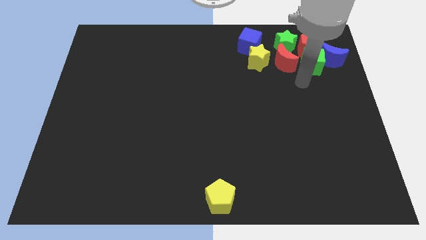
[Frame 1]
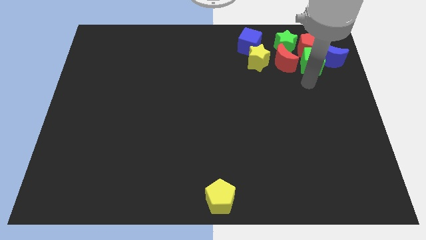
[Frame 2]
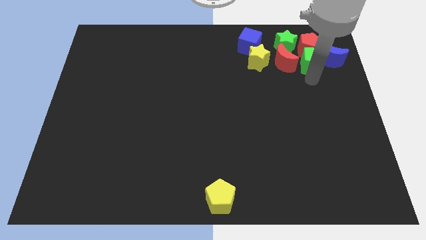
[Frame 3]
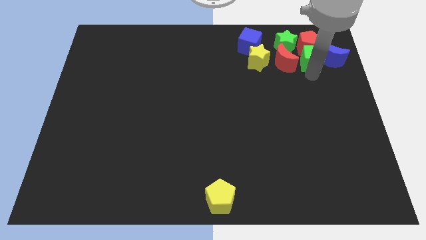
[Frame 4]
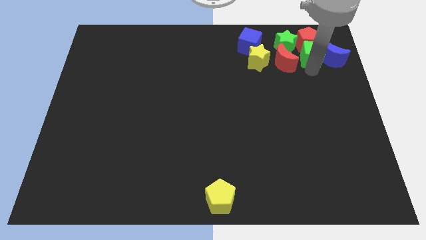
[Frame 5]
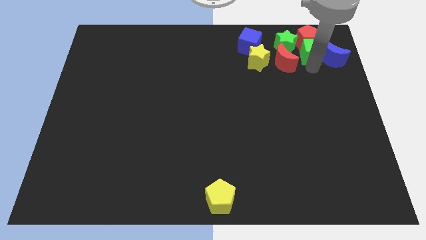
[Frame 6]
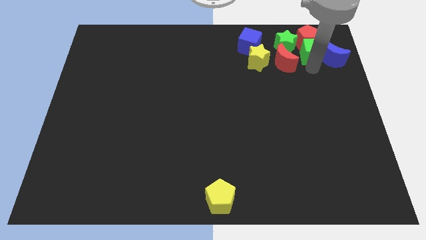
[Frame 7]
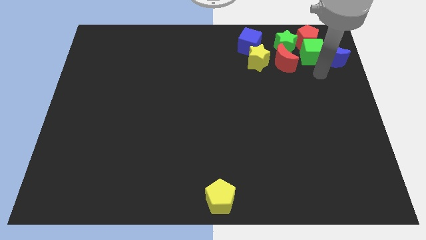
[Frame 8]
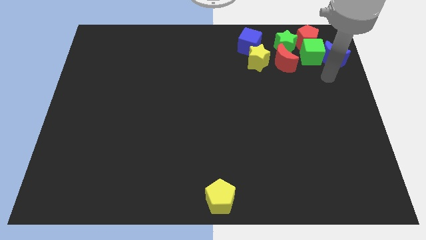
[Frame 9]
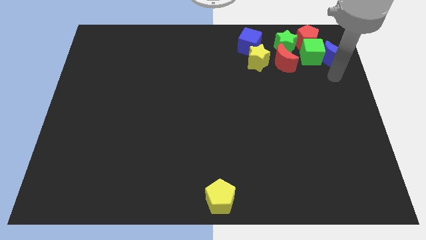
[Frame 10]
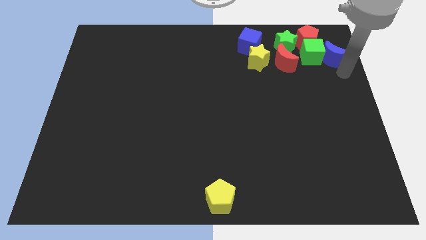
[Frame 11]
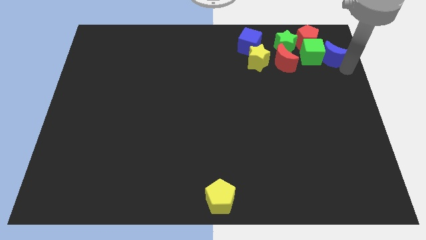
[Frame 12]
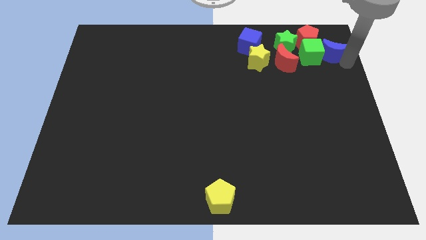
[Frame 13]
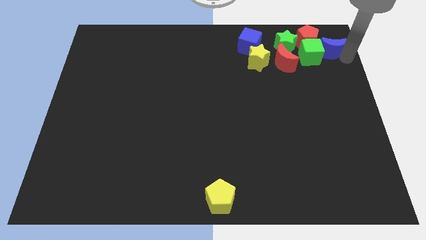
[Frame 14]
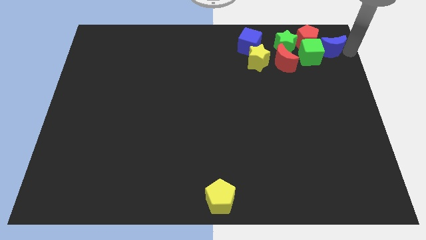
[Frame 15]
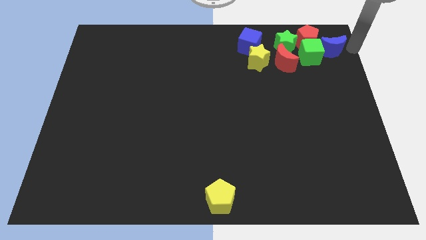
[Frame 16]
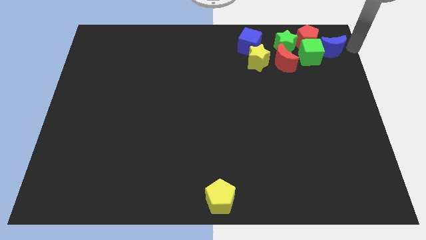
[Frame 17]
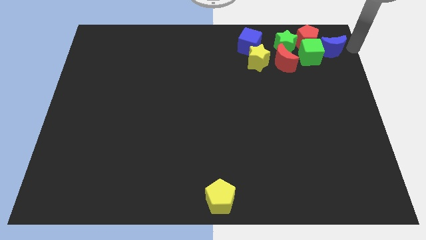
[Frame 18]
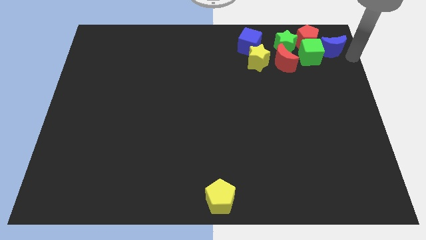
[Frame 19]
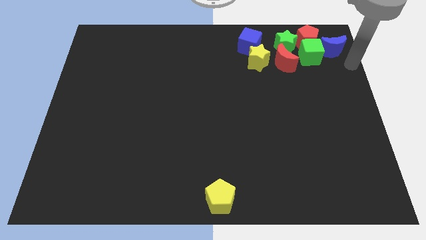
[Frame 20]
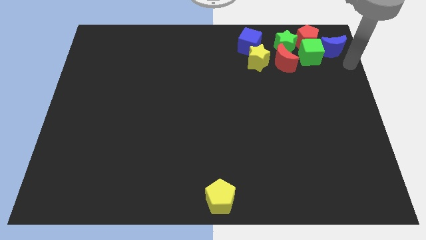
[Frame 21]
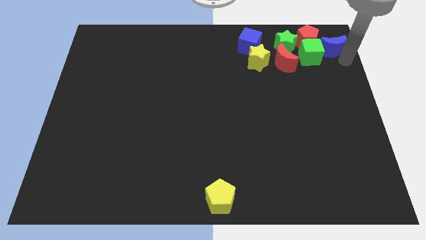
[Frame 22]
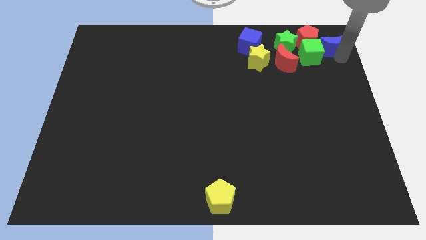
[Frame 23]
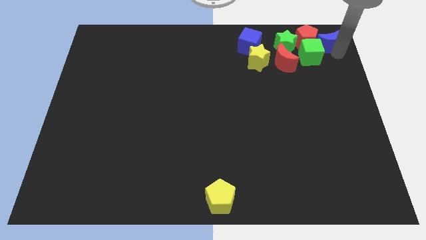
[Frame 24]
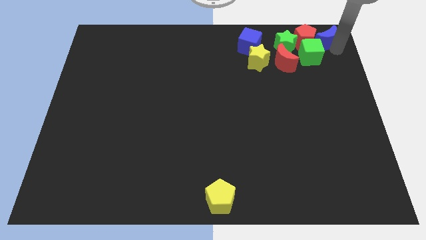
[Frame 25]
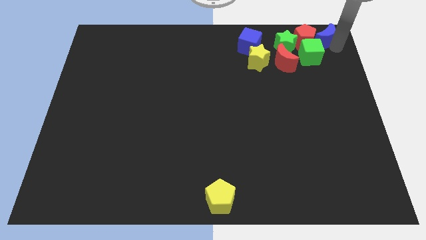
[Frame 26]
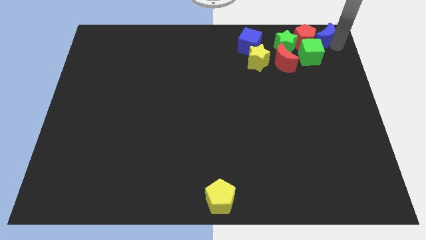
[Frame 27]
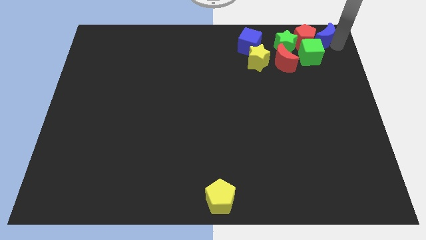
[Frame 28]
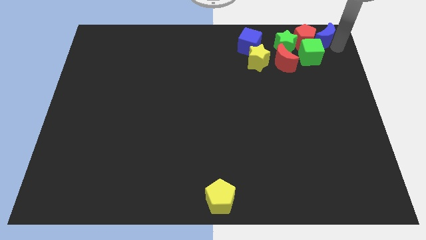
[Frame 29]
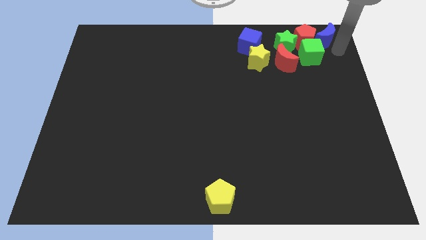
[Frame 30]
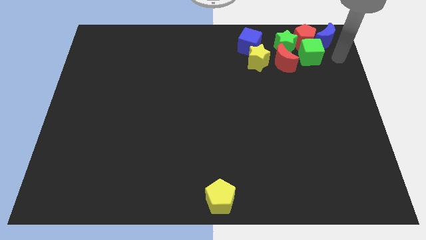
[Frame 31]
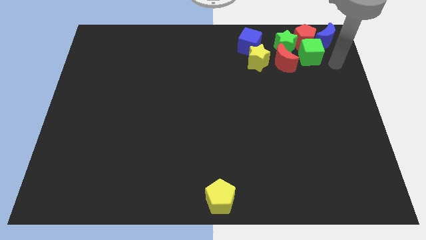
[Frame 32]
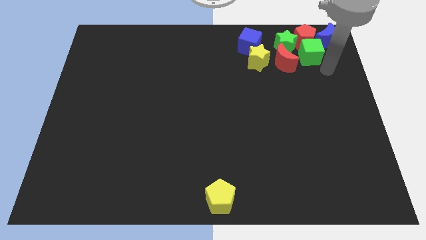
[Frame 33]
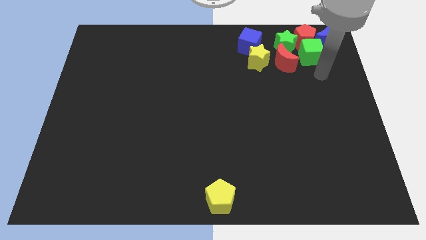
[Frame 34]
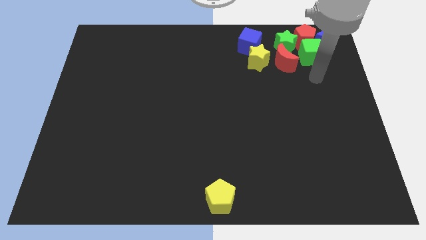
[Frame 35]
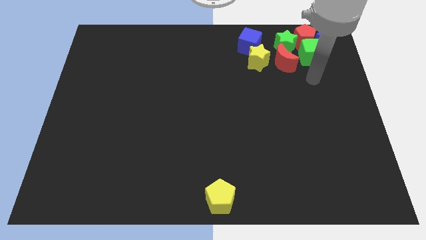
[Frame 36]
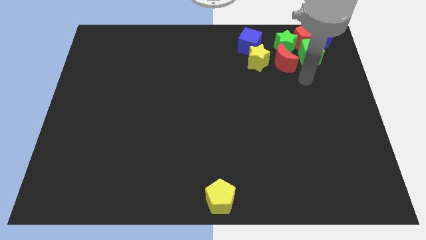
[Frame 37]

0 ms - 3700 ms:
push the green cube and blue crescent into the red pentagon

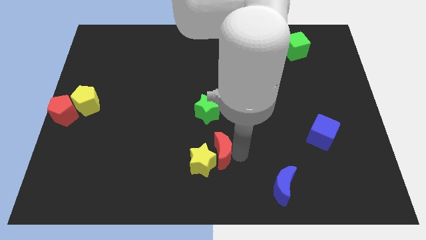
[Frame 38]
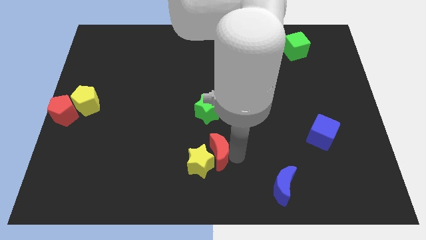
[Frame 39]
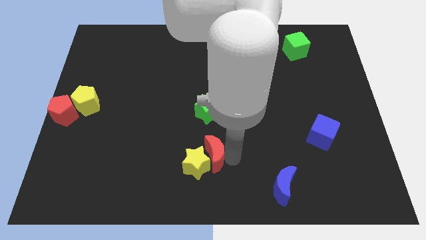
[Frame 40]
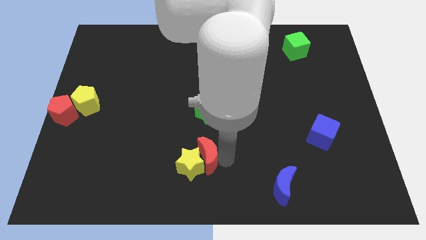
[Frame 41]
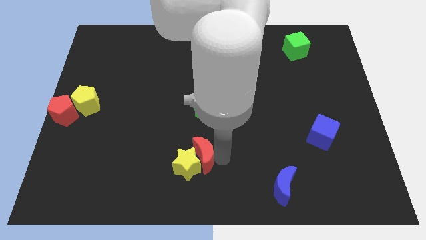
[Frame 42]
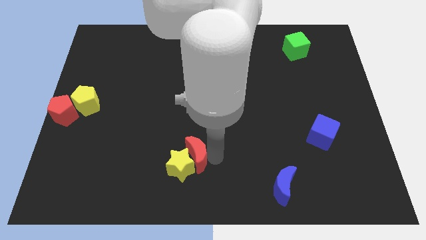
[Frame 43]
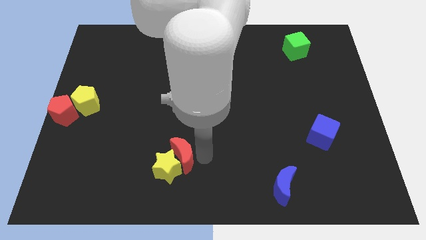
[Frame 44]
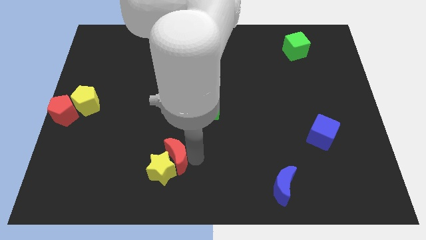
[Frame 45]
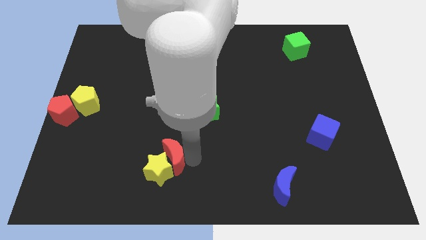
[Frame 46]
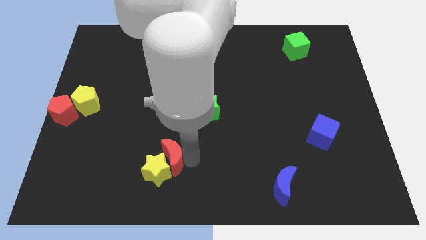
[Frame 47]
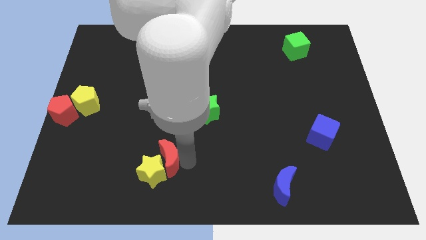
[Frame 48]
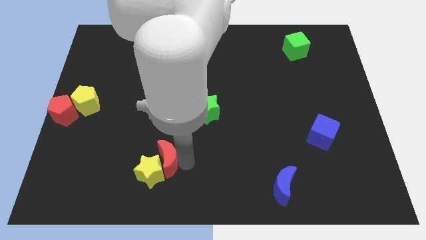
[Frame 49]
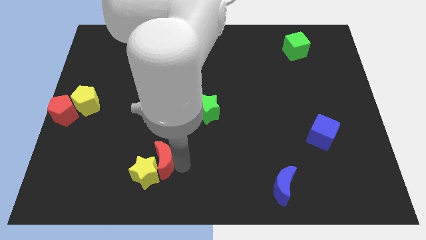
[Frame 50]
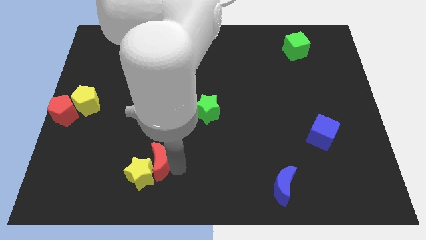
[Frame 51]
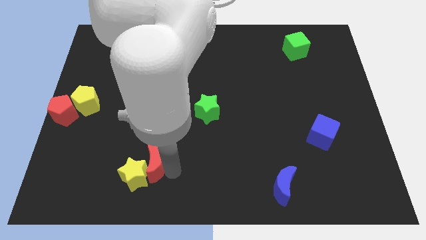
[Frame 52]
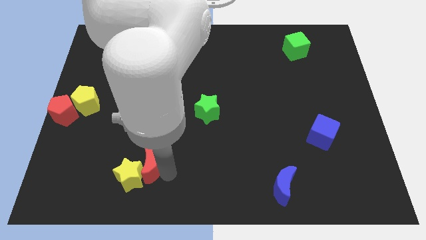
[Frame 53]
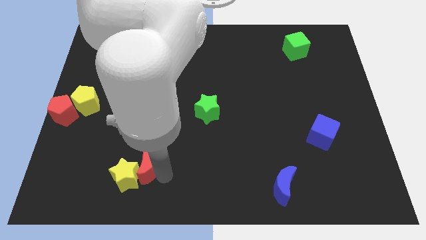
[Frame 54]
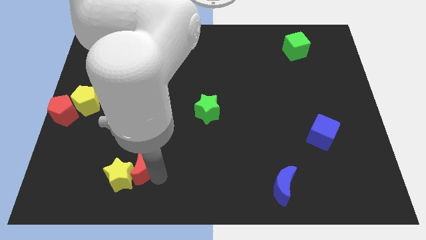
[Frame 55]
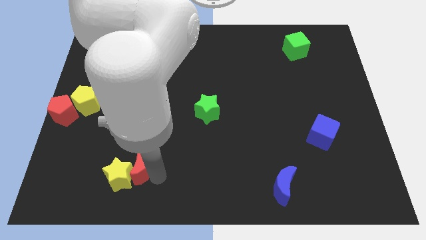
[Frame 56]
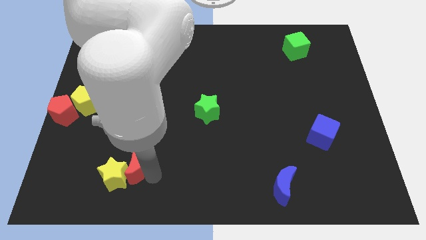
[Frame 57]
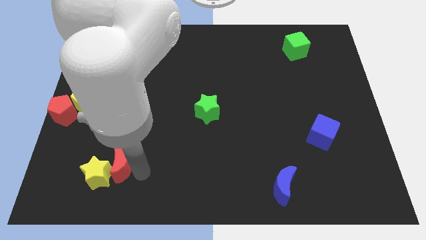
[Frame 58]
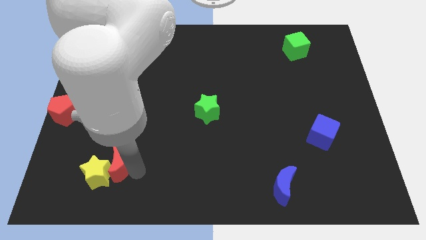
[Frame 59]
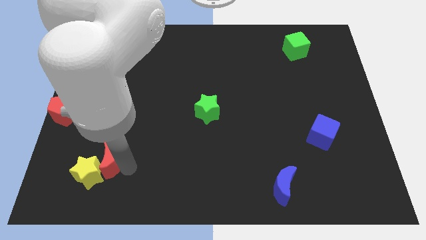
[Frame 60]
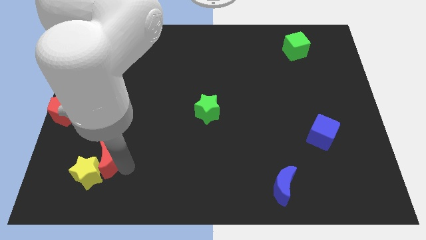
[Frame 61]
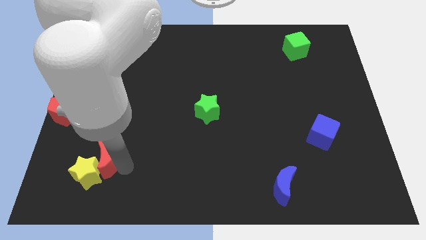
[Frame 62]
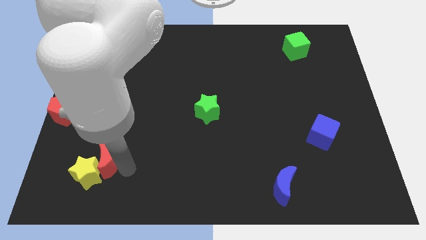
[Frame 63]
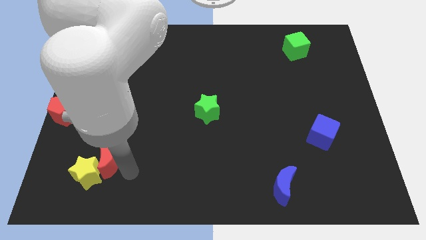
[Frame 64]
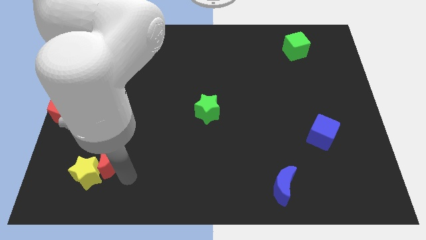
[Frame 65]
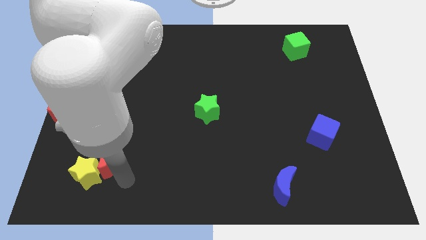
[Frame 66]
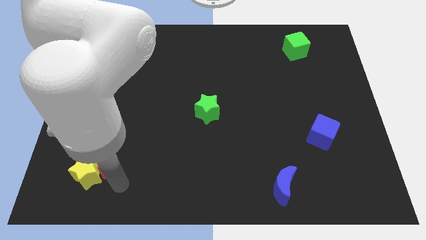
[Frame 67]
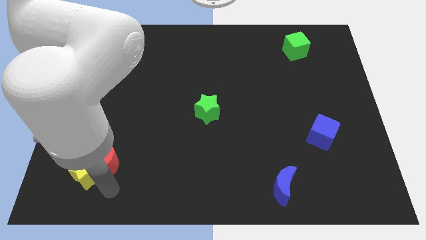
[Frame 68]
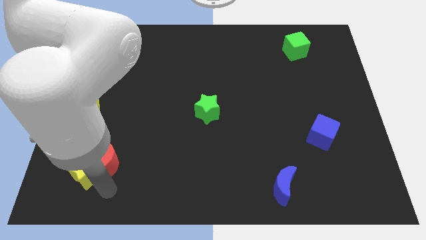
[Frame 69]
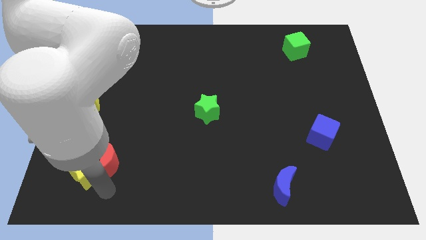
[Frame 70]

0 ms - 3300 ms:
push the red moon and yellow star to the left side of the board

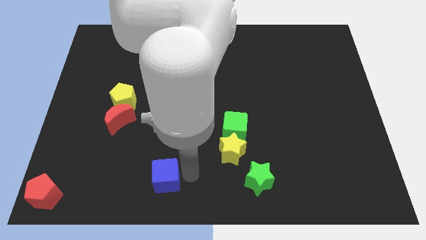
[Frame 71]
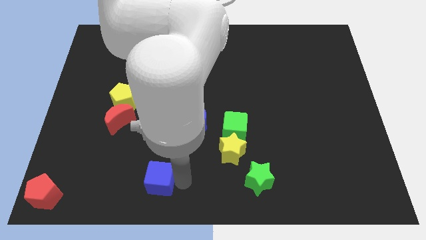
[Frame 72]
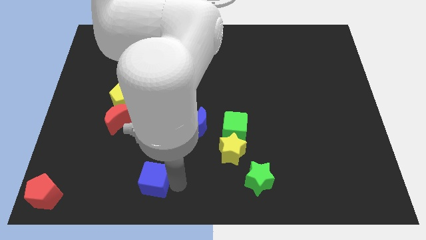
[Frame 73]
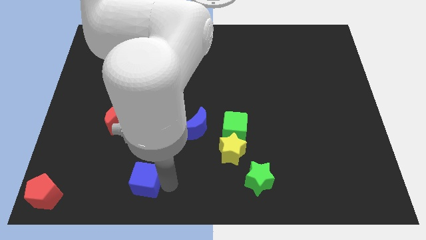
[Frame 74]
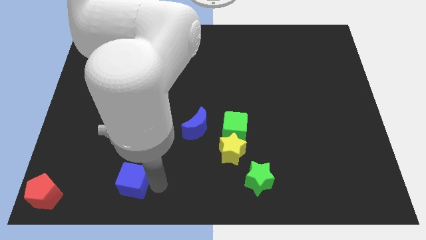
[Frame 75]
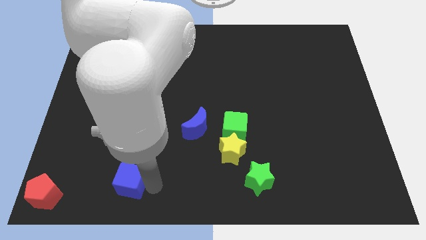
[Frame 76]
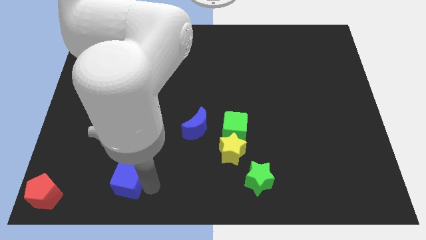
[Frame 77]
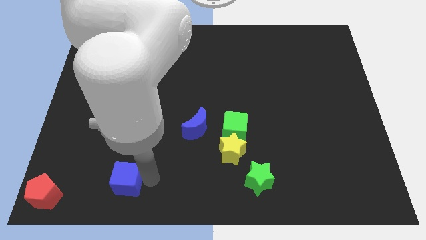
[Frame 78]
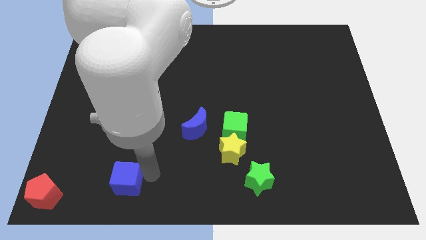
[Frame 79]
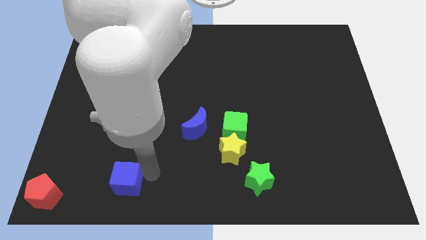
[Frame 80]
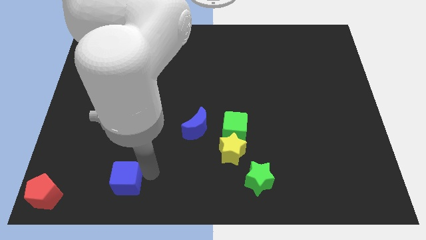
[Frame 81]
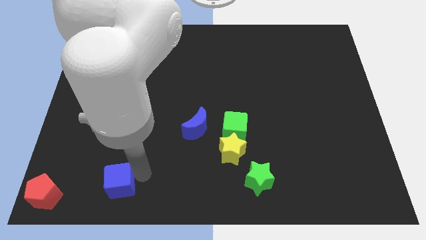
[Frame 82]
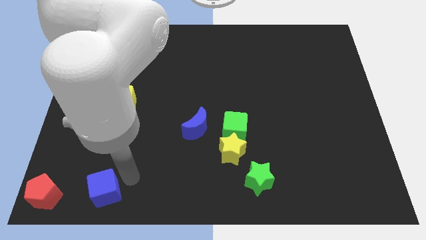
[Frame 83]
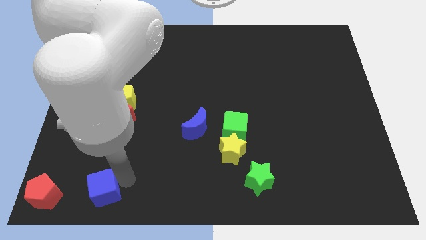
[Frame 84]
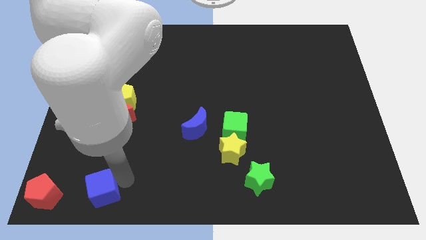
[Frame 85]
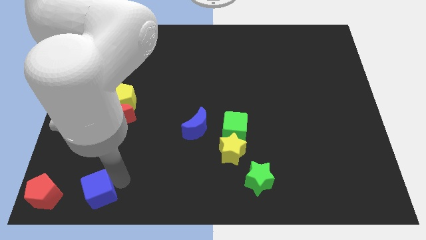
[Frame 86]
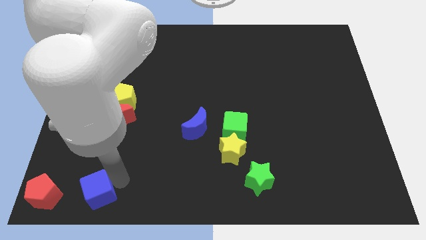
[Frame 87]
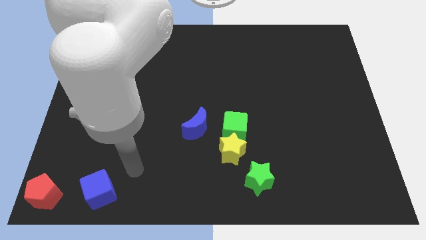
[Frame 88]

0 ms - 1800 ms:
move the blue cube towards the right side of the red pentagon

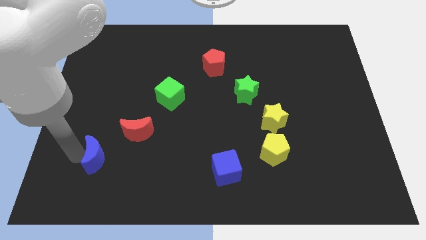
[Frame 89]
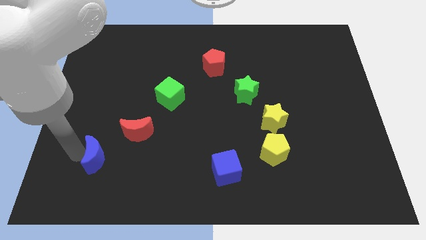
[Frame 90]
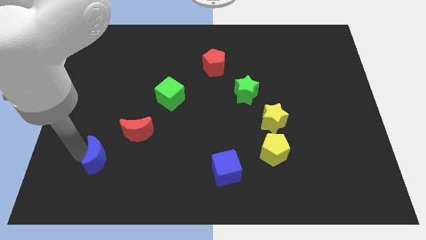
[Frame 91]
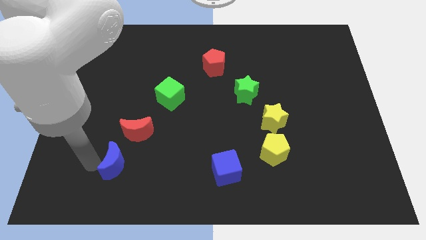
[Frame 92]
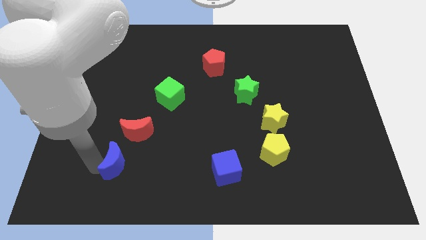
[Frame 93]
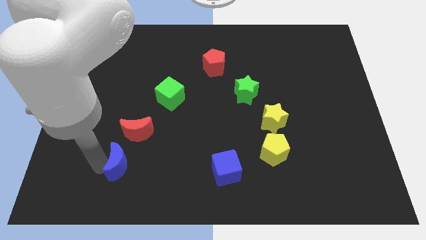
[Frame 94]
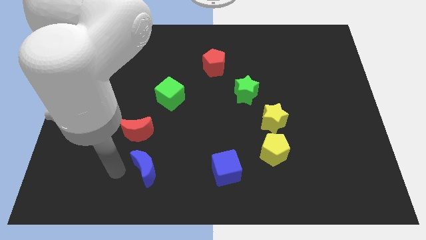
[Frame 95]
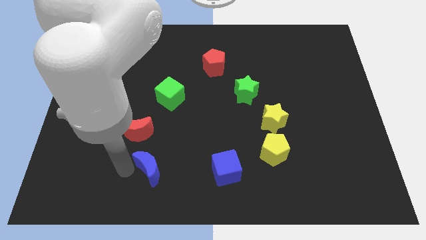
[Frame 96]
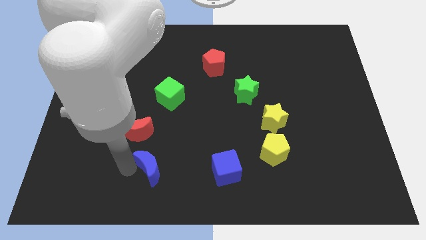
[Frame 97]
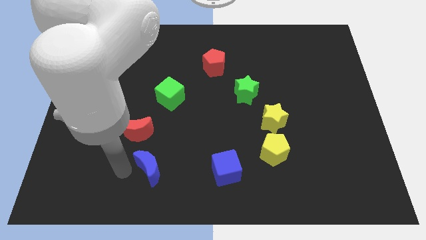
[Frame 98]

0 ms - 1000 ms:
place the blue crescent below the red crescent
